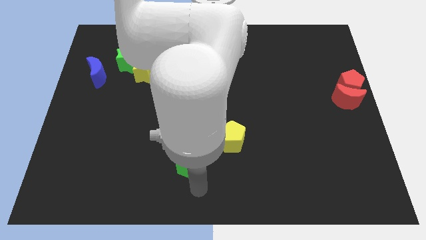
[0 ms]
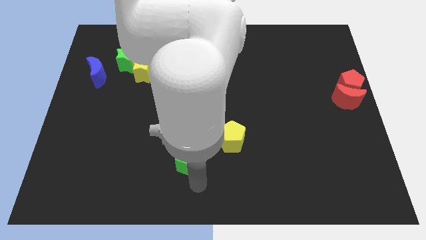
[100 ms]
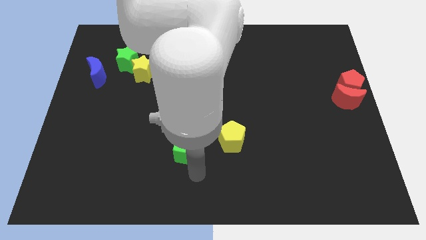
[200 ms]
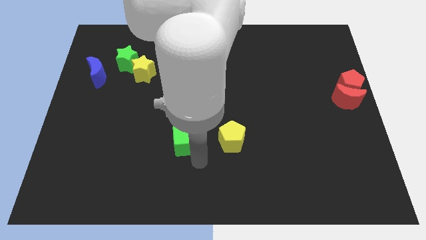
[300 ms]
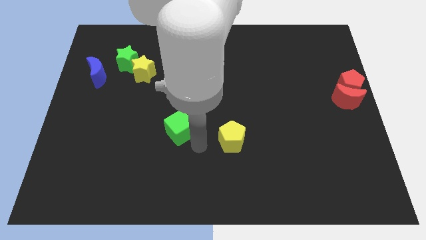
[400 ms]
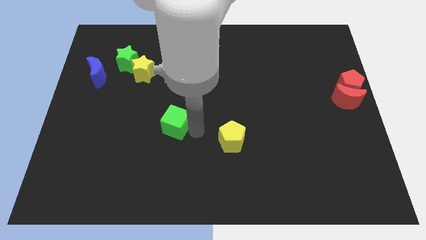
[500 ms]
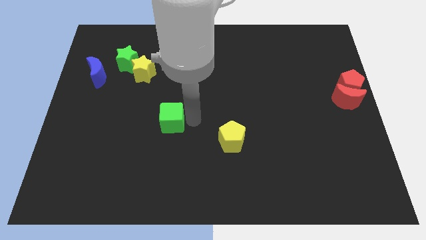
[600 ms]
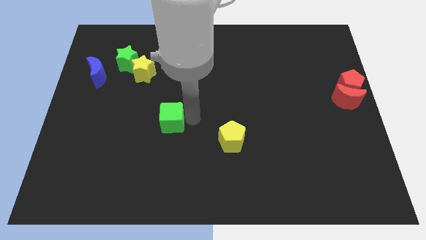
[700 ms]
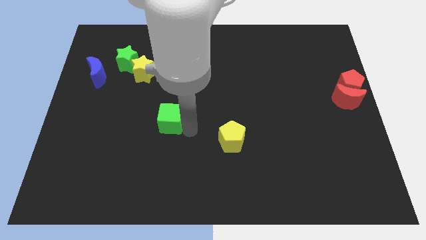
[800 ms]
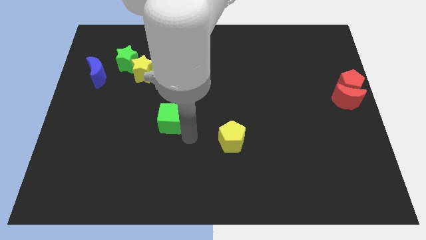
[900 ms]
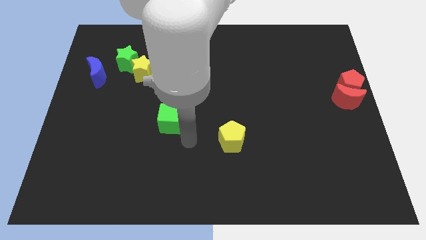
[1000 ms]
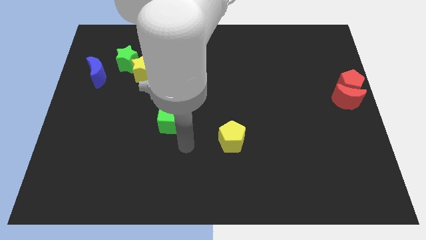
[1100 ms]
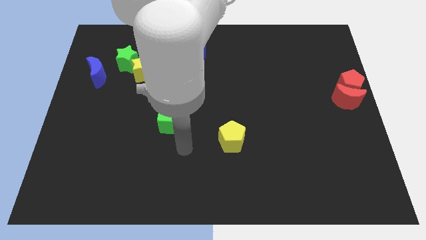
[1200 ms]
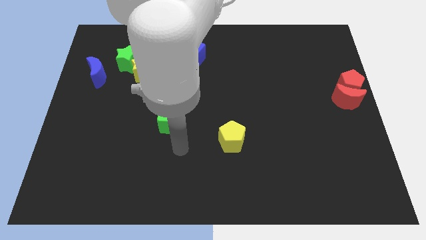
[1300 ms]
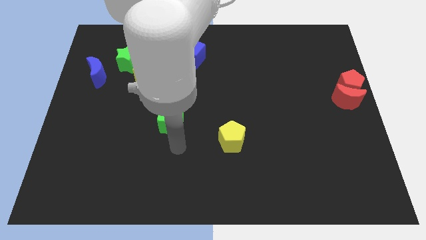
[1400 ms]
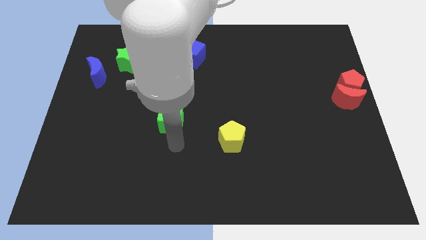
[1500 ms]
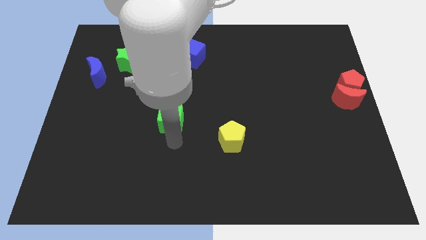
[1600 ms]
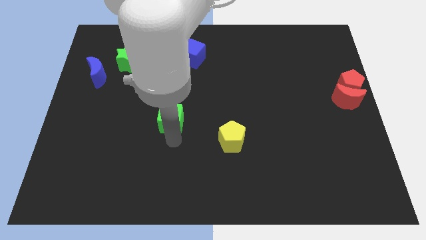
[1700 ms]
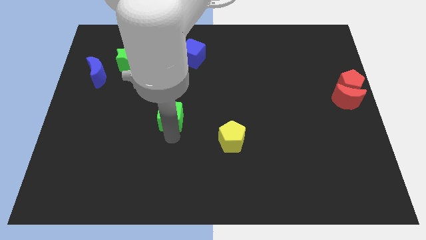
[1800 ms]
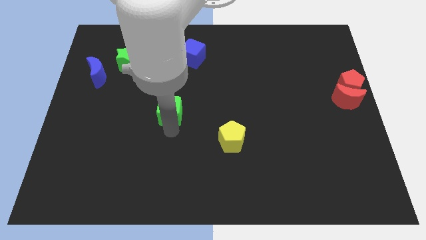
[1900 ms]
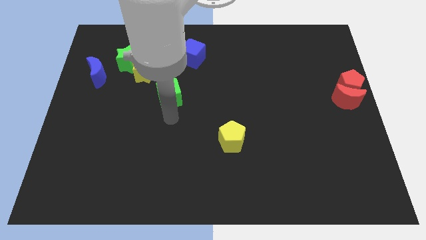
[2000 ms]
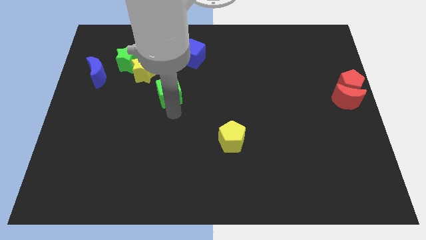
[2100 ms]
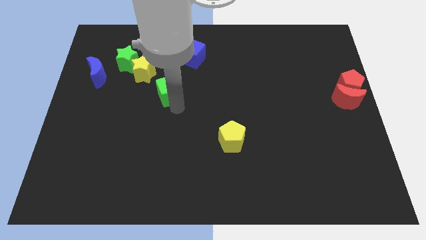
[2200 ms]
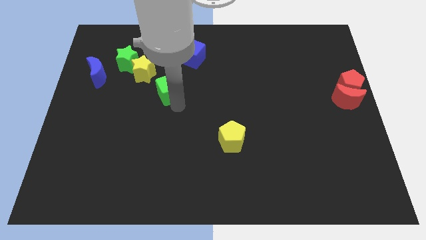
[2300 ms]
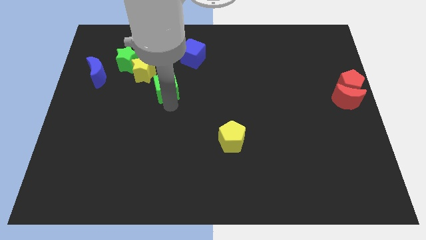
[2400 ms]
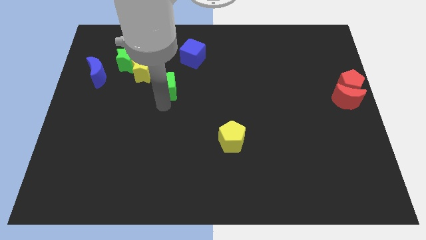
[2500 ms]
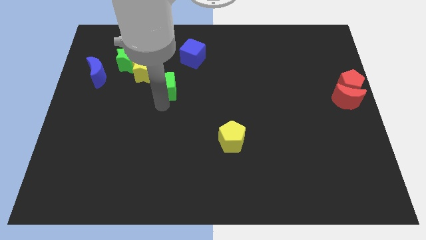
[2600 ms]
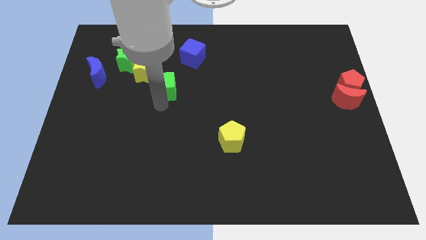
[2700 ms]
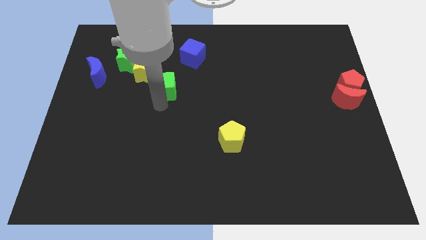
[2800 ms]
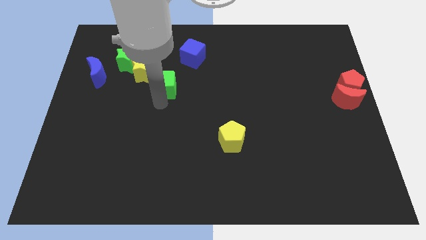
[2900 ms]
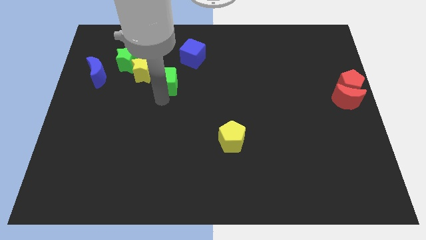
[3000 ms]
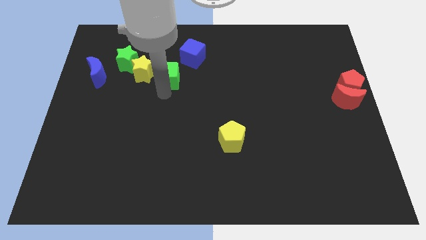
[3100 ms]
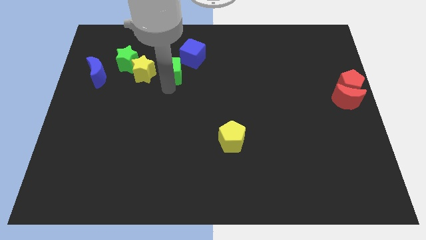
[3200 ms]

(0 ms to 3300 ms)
push the green cube to the right of the yellow star

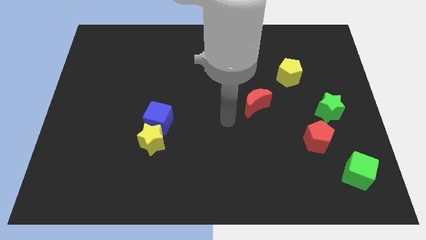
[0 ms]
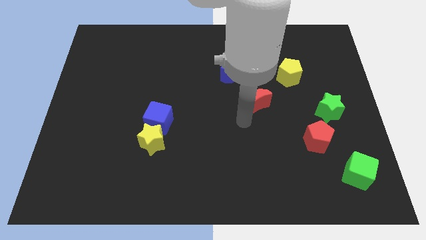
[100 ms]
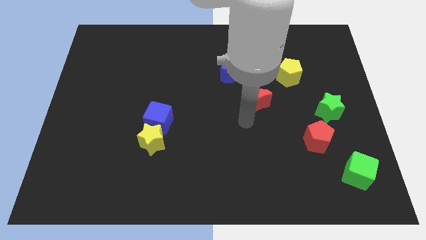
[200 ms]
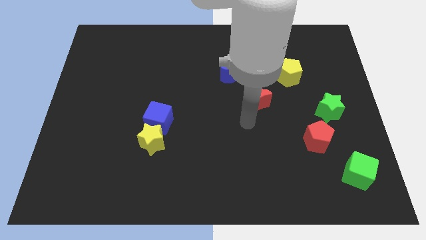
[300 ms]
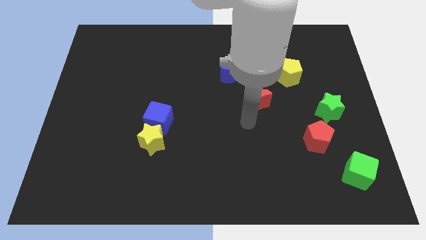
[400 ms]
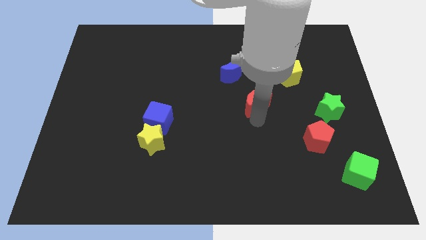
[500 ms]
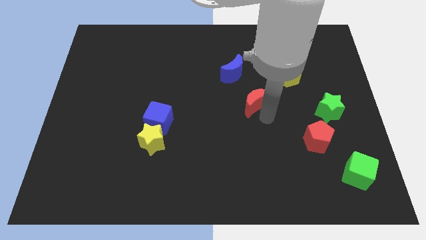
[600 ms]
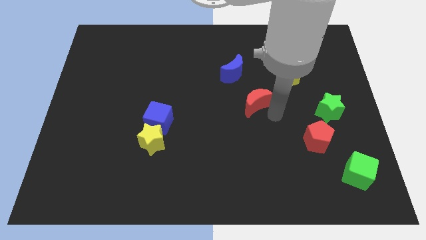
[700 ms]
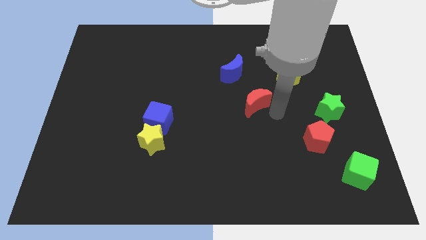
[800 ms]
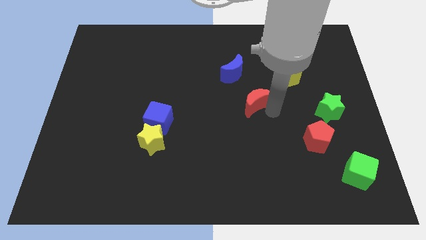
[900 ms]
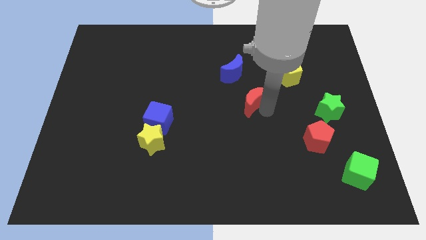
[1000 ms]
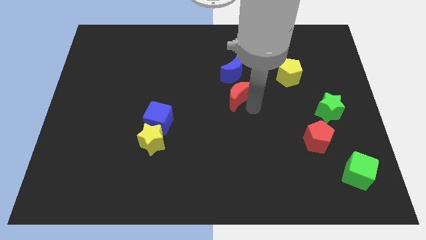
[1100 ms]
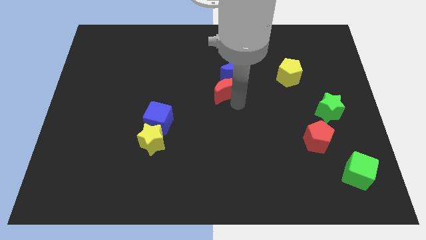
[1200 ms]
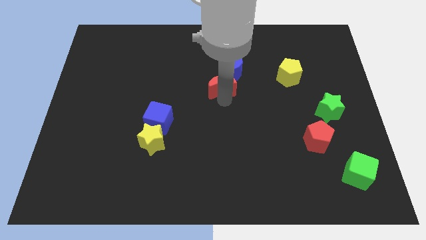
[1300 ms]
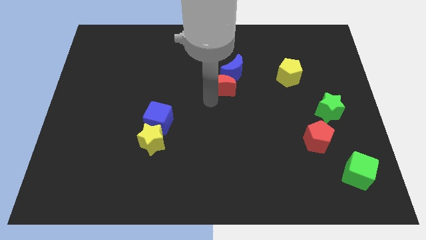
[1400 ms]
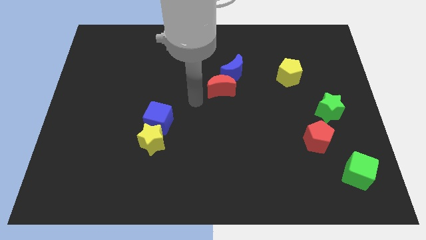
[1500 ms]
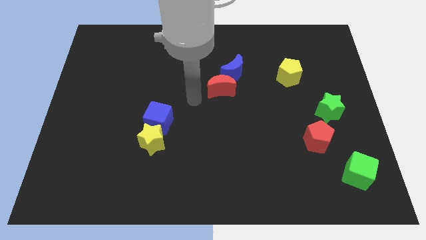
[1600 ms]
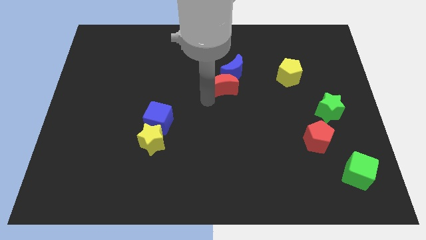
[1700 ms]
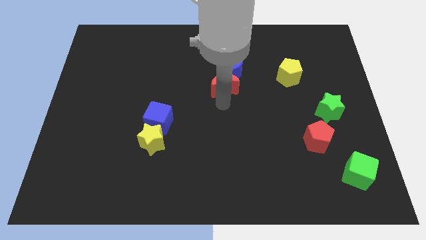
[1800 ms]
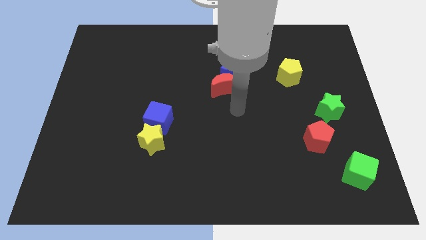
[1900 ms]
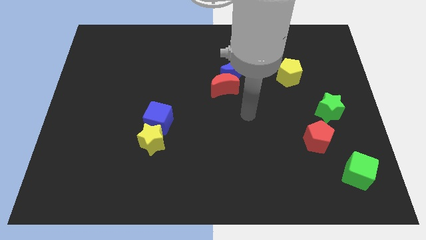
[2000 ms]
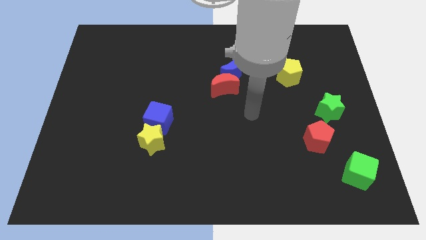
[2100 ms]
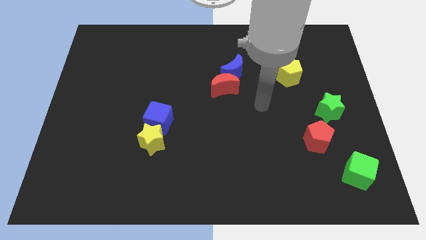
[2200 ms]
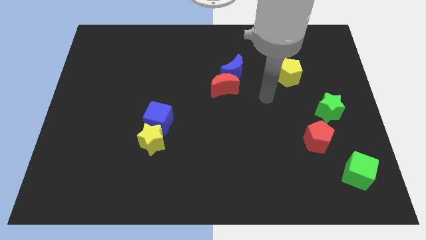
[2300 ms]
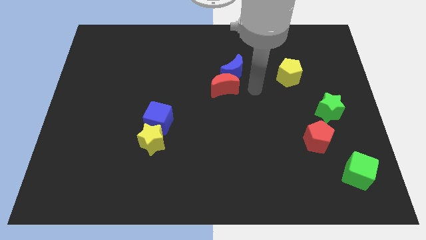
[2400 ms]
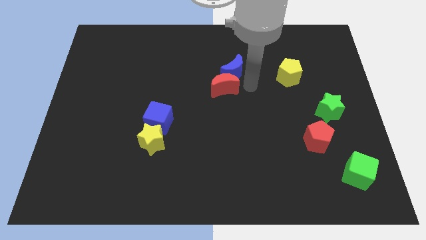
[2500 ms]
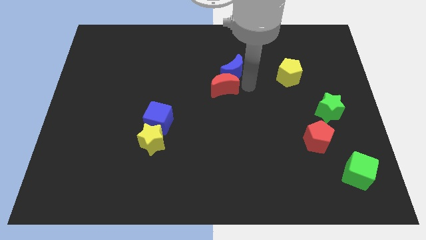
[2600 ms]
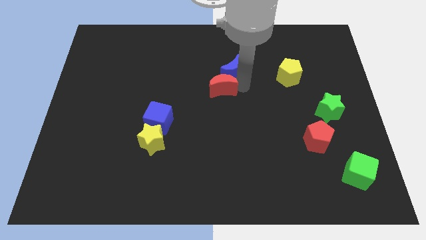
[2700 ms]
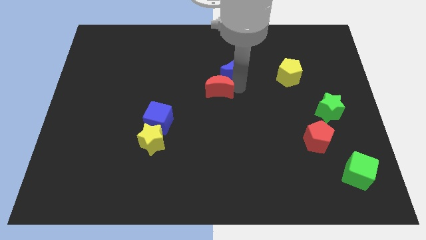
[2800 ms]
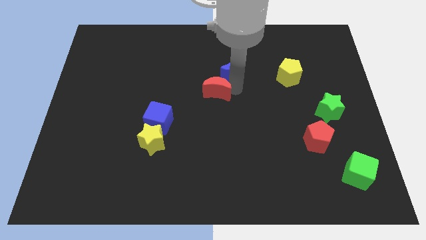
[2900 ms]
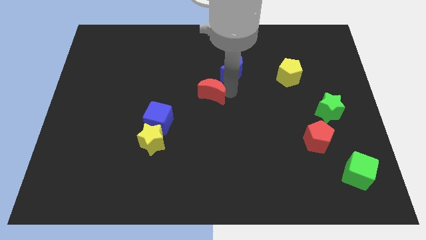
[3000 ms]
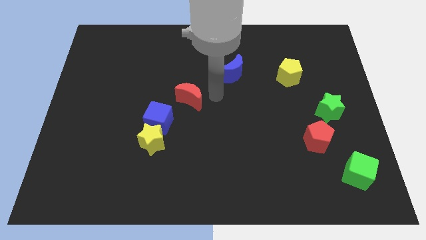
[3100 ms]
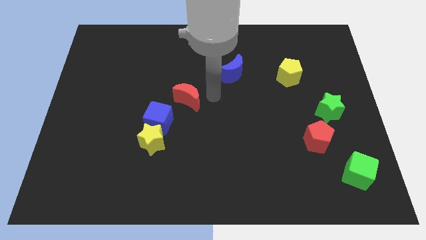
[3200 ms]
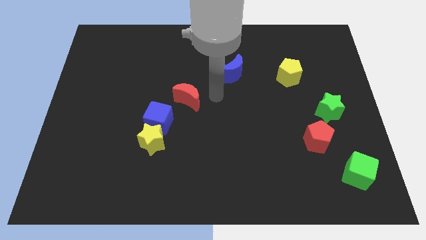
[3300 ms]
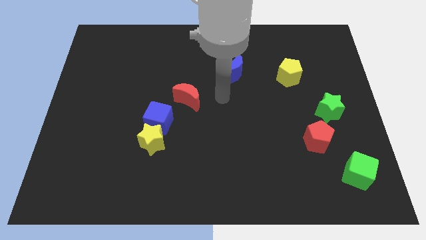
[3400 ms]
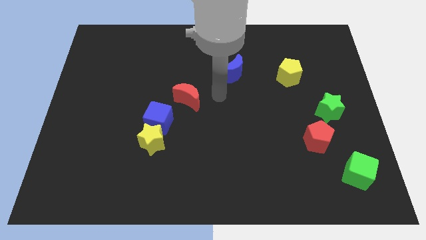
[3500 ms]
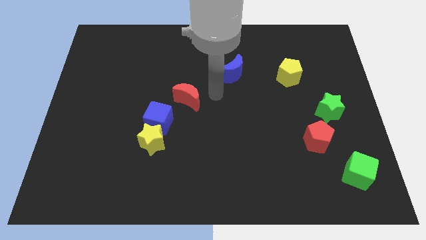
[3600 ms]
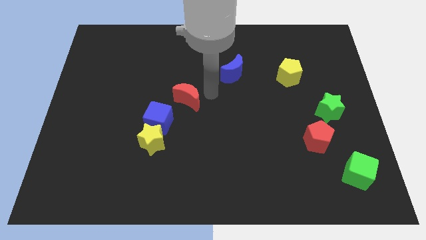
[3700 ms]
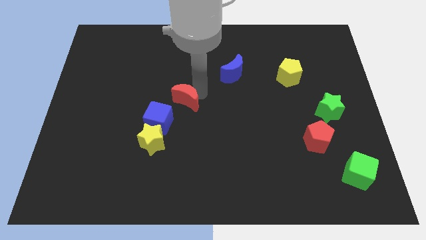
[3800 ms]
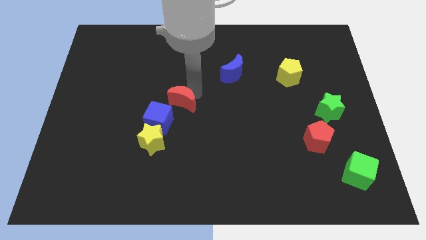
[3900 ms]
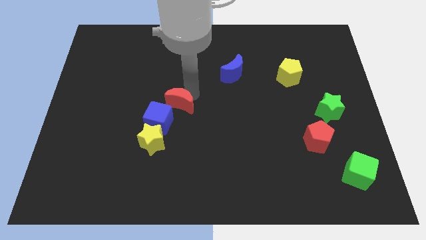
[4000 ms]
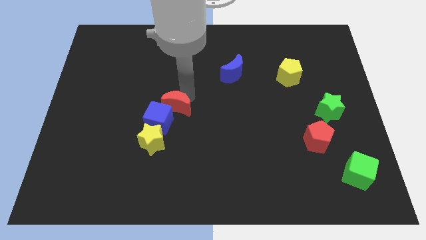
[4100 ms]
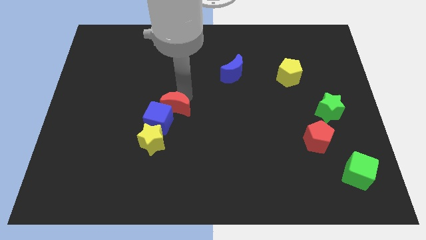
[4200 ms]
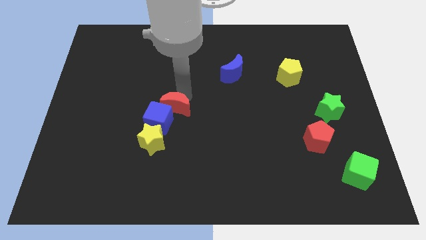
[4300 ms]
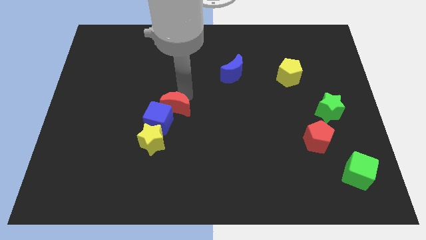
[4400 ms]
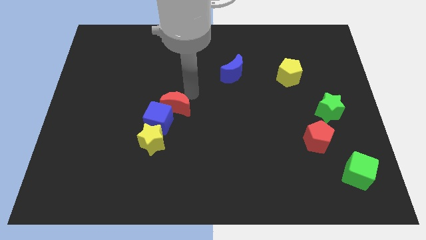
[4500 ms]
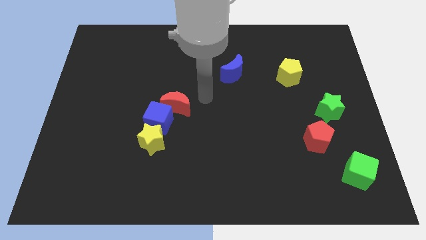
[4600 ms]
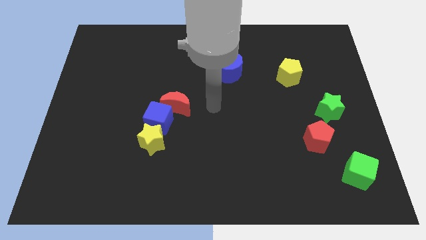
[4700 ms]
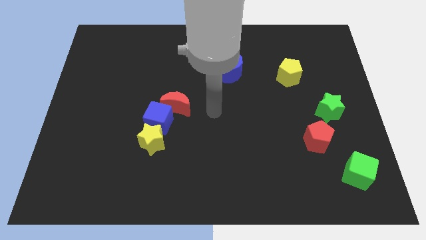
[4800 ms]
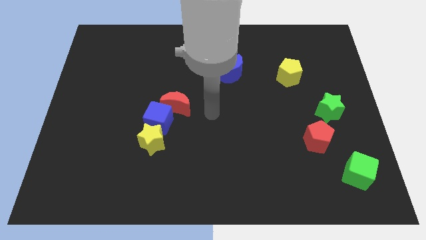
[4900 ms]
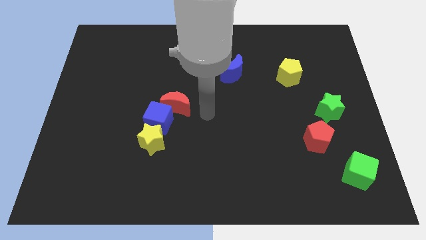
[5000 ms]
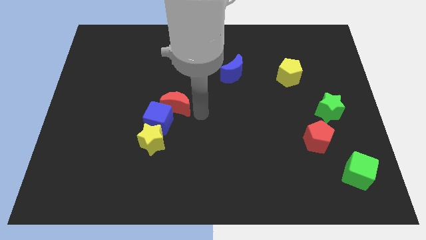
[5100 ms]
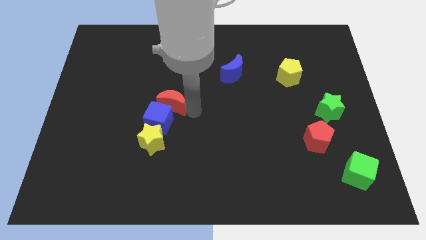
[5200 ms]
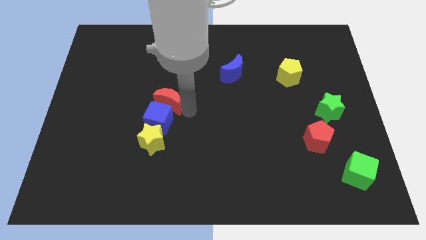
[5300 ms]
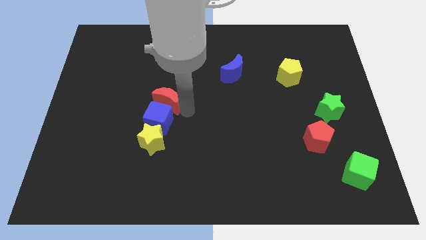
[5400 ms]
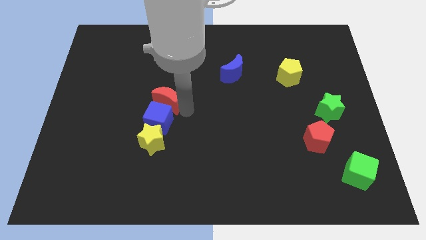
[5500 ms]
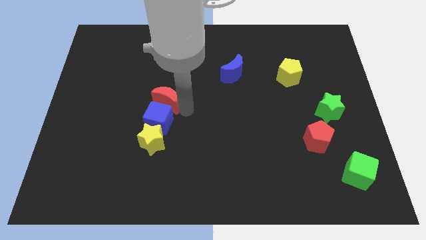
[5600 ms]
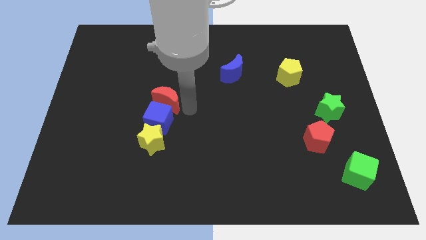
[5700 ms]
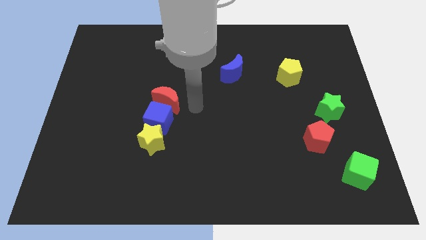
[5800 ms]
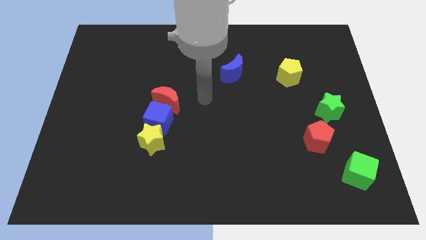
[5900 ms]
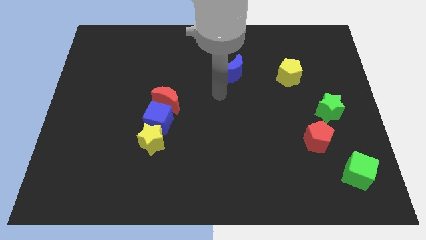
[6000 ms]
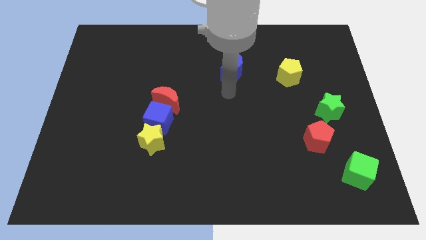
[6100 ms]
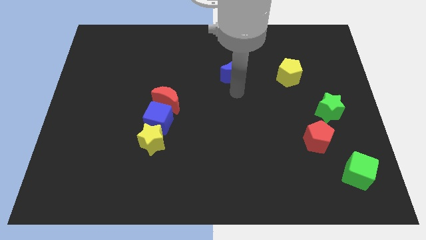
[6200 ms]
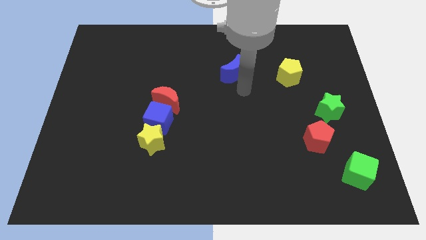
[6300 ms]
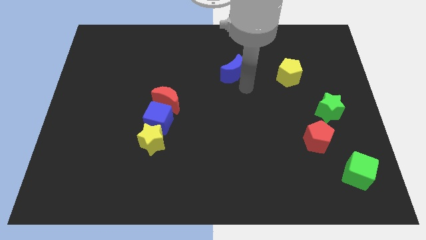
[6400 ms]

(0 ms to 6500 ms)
place the red crescent on top of the blue cube
